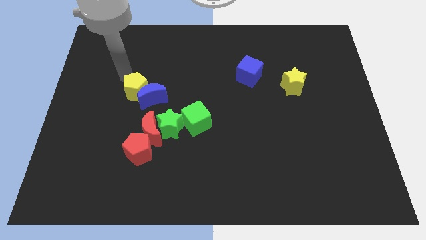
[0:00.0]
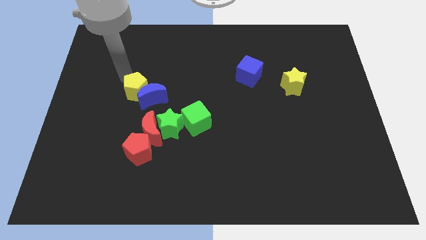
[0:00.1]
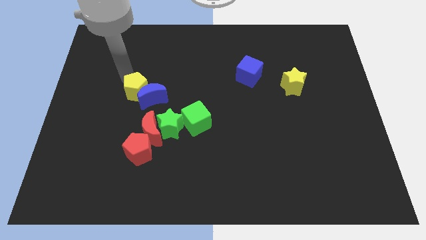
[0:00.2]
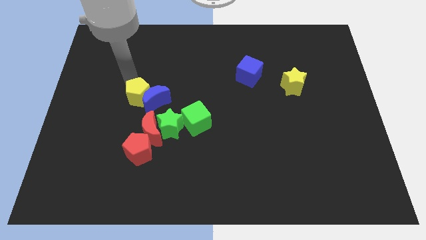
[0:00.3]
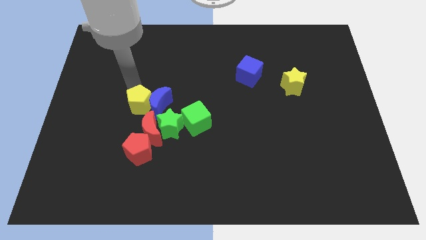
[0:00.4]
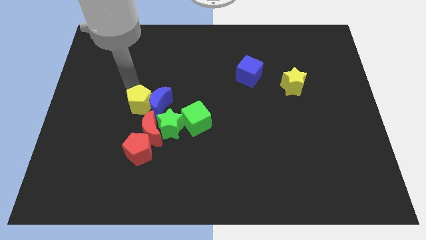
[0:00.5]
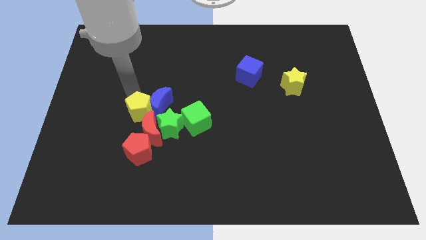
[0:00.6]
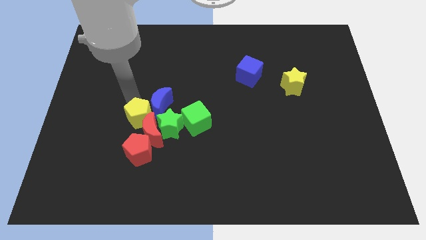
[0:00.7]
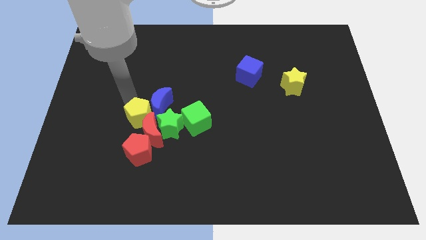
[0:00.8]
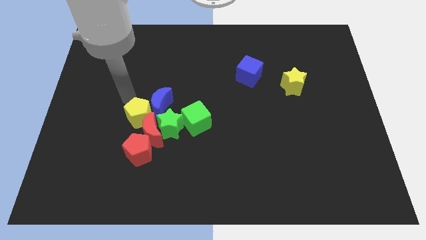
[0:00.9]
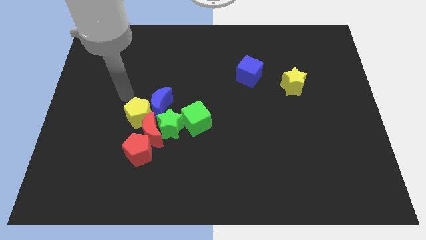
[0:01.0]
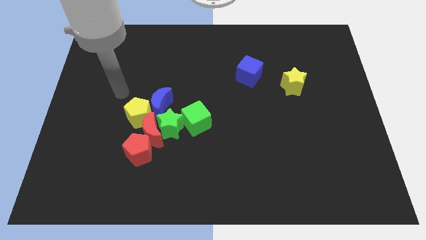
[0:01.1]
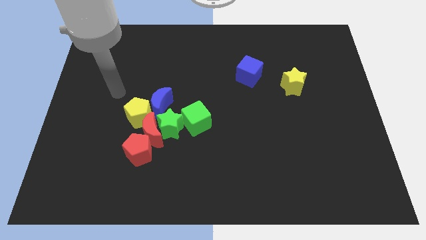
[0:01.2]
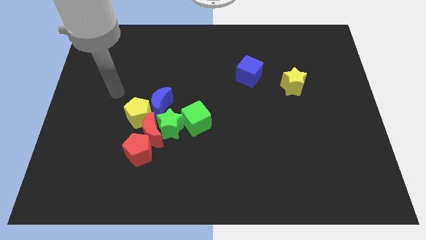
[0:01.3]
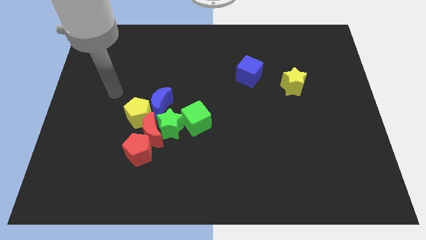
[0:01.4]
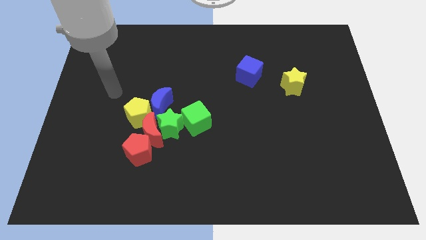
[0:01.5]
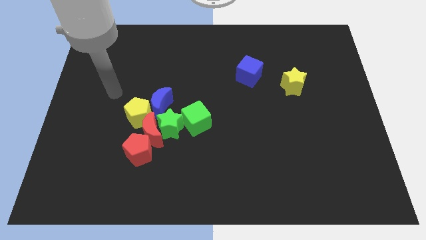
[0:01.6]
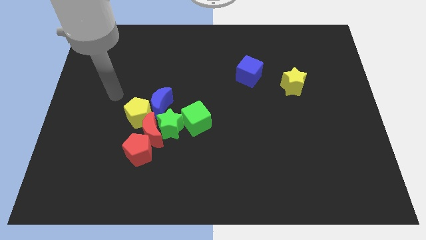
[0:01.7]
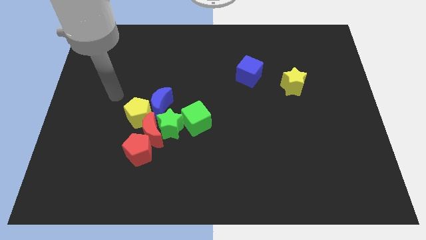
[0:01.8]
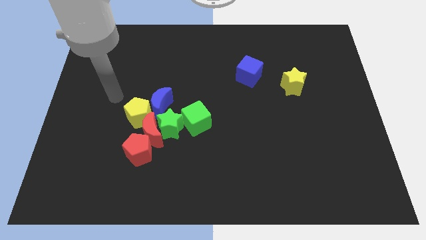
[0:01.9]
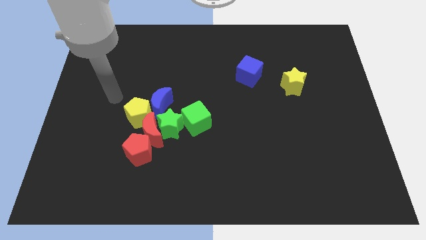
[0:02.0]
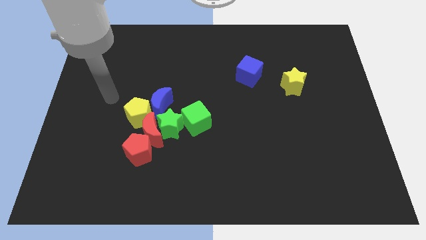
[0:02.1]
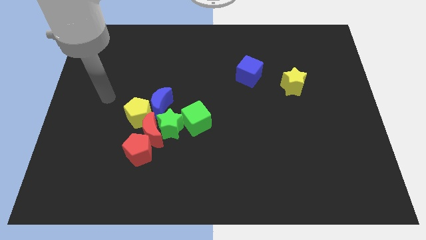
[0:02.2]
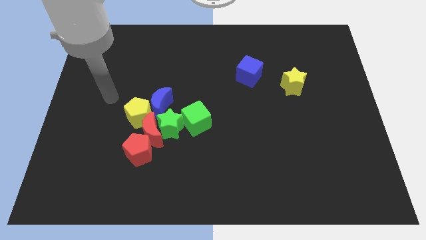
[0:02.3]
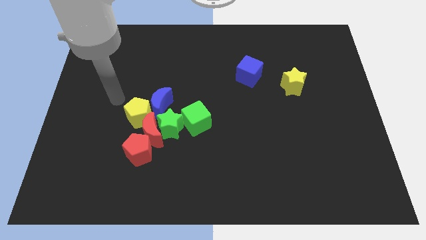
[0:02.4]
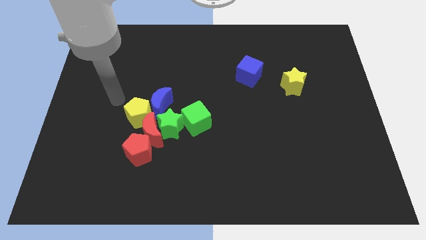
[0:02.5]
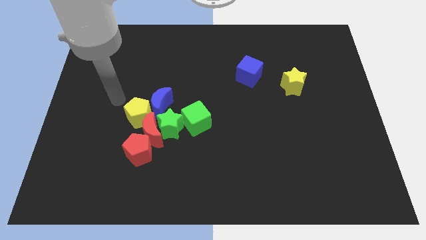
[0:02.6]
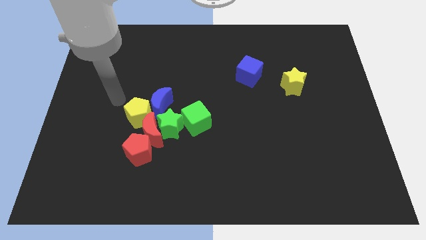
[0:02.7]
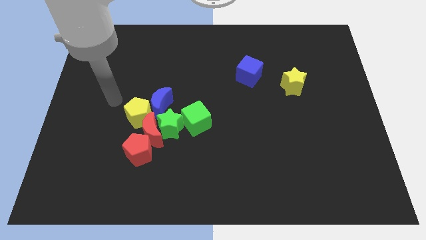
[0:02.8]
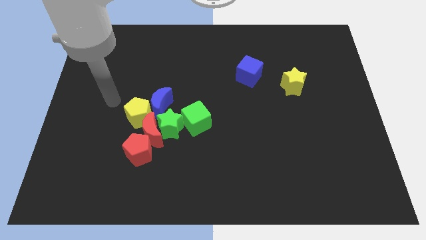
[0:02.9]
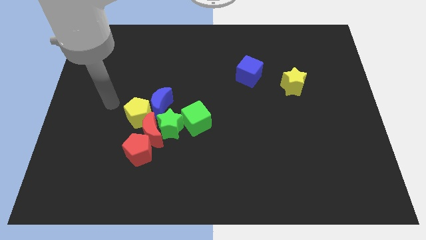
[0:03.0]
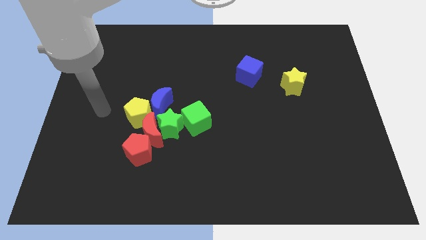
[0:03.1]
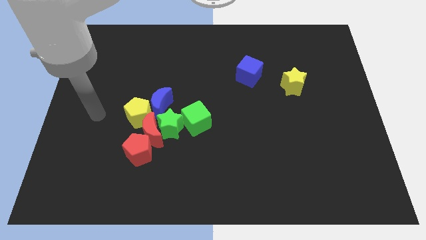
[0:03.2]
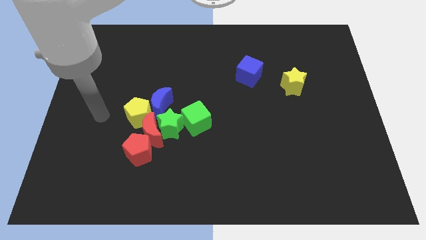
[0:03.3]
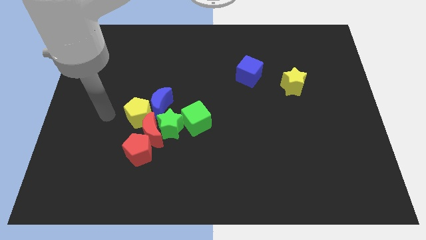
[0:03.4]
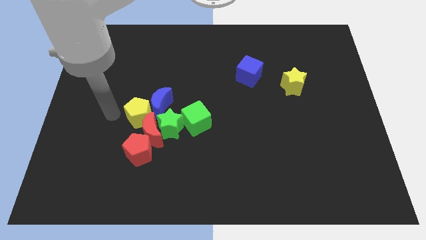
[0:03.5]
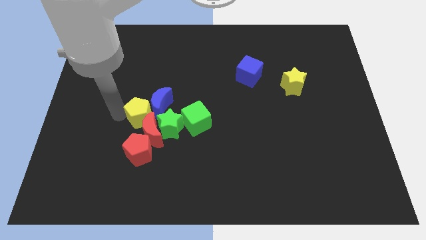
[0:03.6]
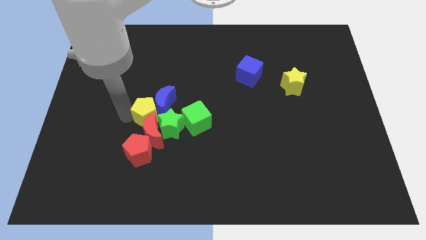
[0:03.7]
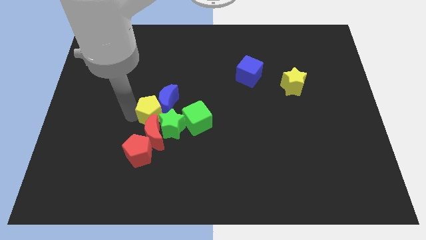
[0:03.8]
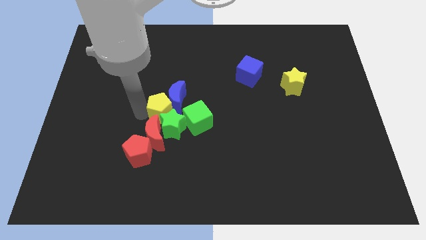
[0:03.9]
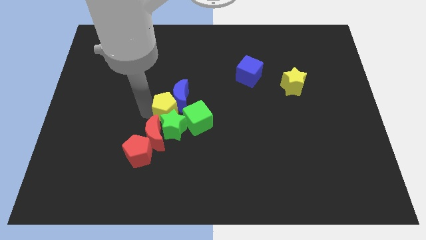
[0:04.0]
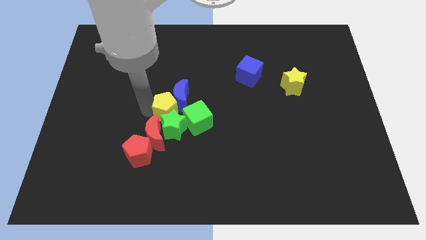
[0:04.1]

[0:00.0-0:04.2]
push the yellow pentagon close to the group of blocks

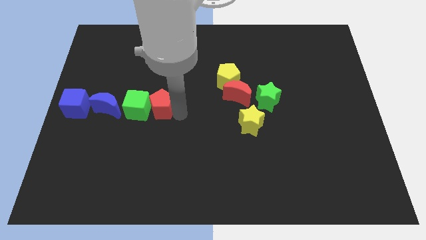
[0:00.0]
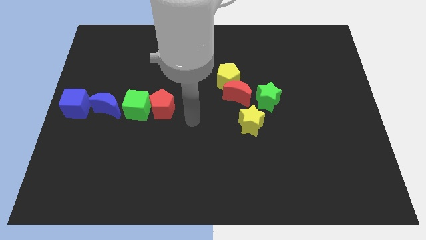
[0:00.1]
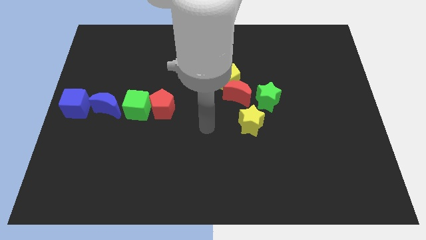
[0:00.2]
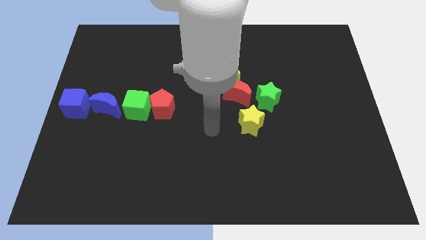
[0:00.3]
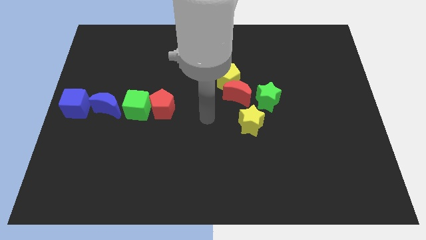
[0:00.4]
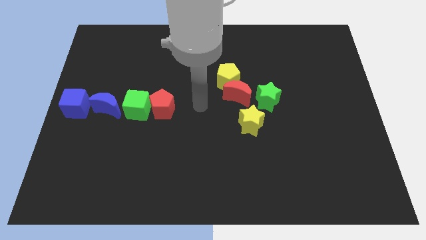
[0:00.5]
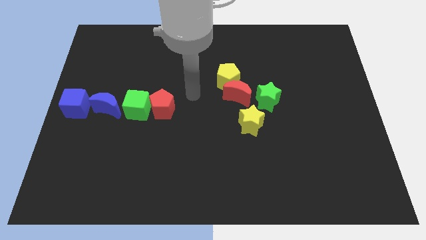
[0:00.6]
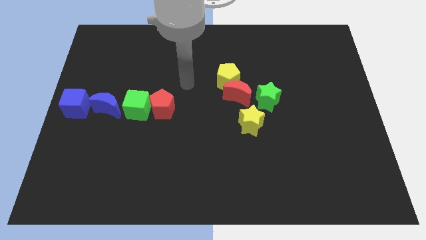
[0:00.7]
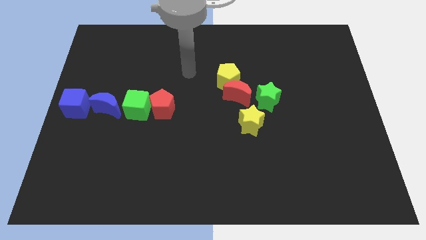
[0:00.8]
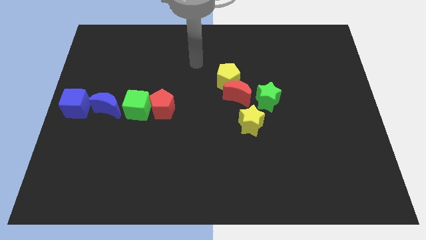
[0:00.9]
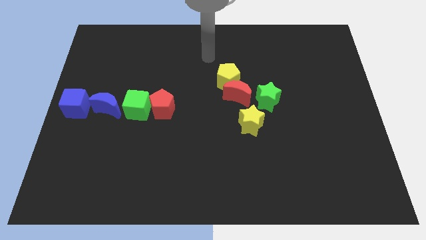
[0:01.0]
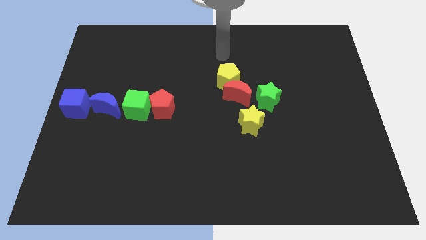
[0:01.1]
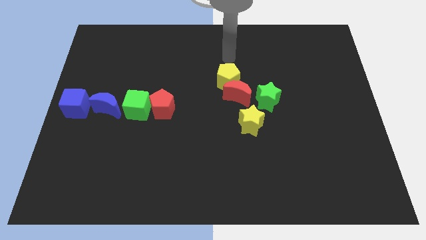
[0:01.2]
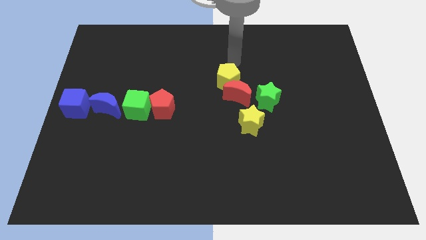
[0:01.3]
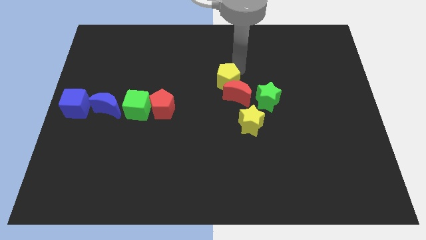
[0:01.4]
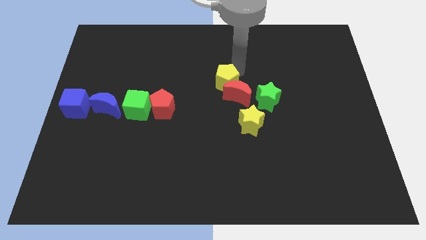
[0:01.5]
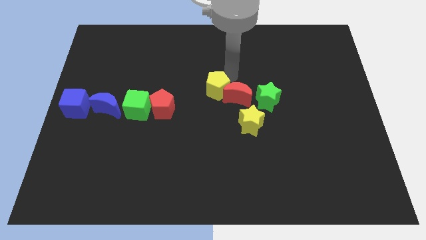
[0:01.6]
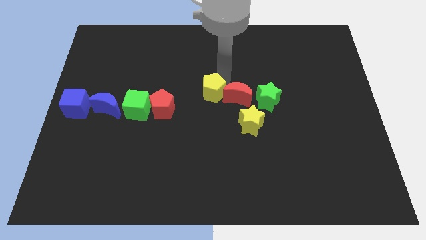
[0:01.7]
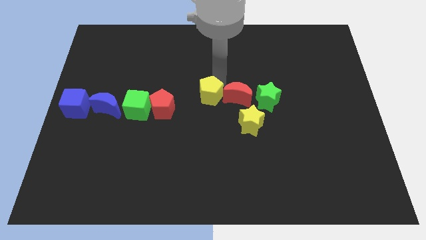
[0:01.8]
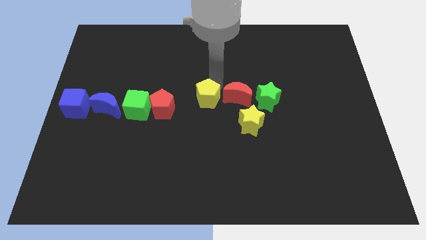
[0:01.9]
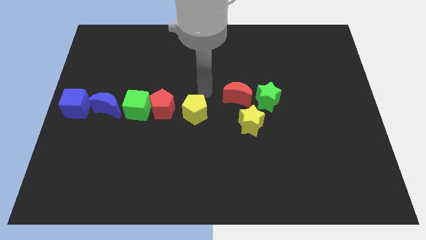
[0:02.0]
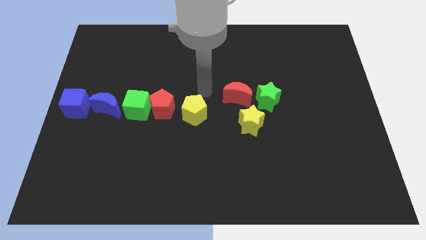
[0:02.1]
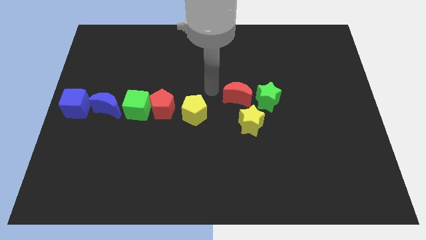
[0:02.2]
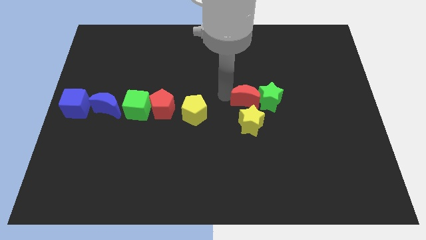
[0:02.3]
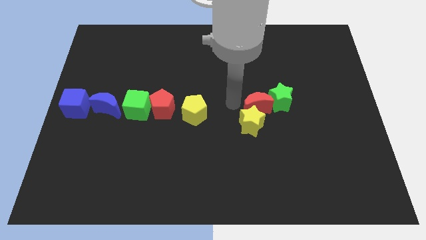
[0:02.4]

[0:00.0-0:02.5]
place the yellow pentagon to the right of the red pentagon

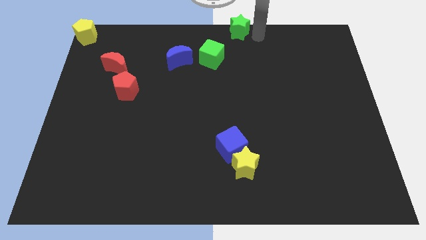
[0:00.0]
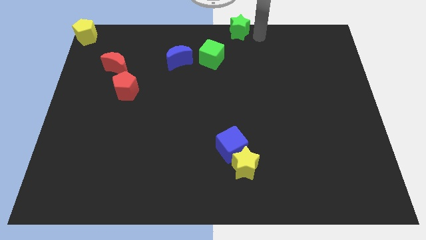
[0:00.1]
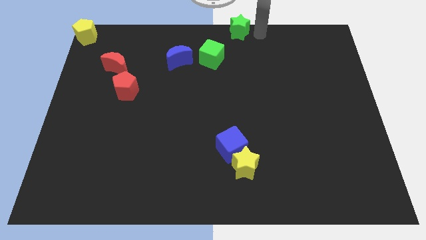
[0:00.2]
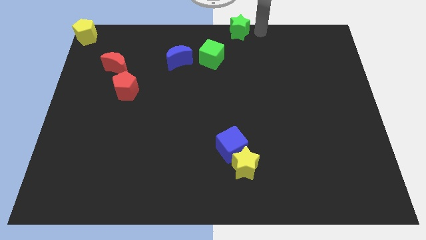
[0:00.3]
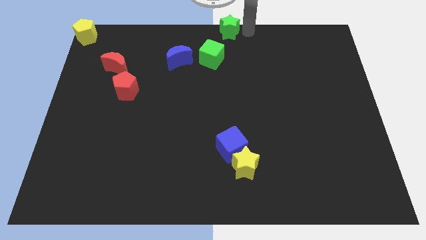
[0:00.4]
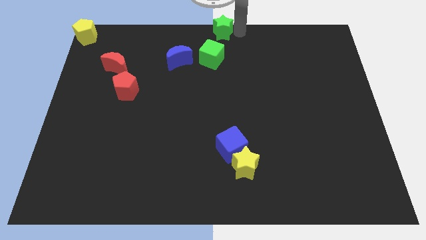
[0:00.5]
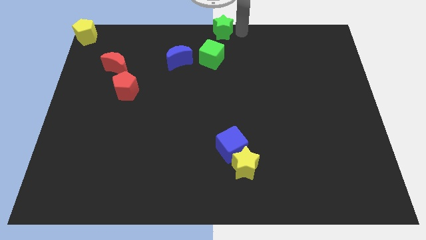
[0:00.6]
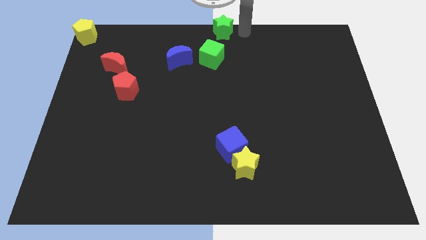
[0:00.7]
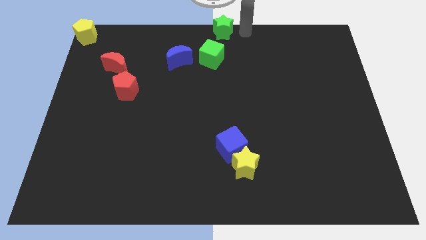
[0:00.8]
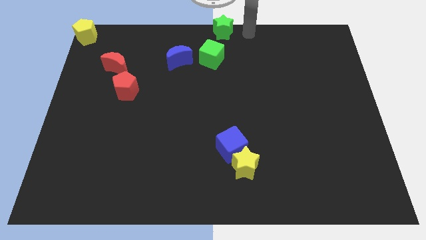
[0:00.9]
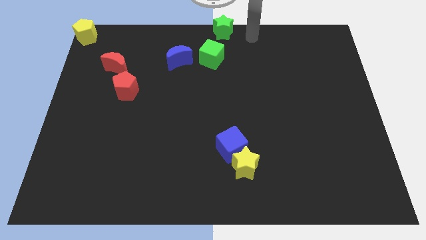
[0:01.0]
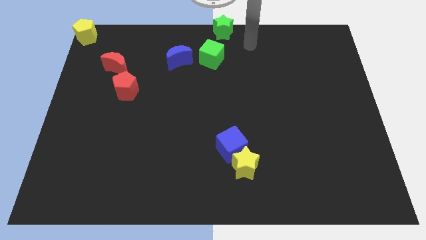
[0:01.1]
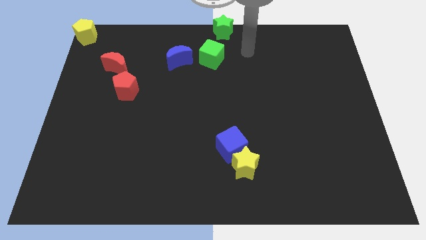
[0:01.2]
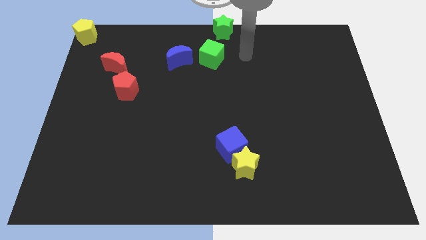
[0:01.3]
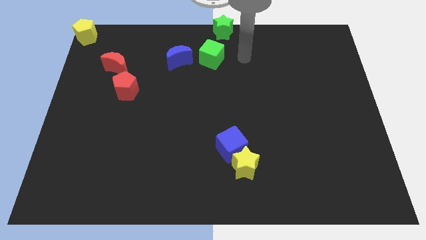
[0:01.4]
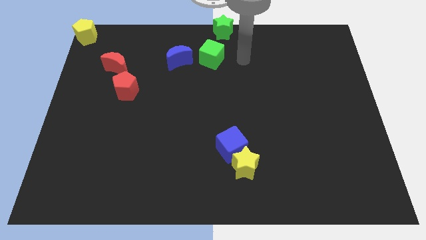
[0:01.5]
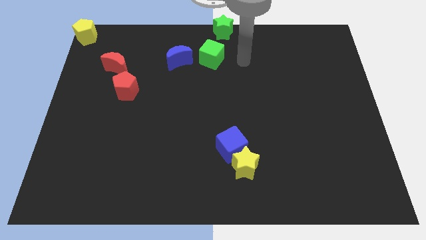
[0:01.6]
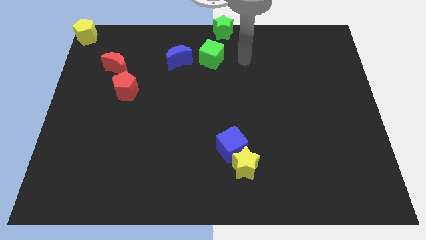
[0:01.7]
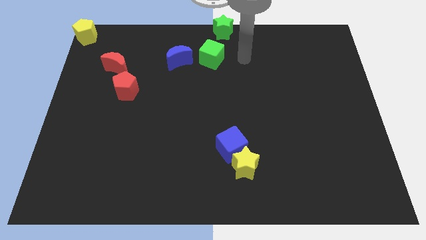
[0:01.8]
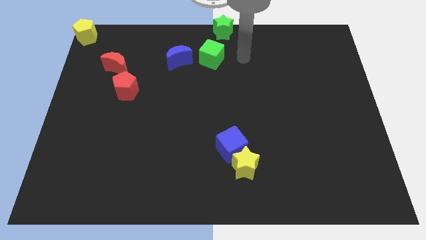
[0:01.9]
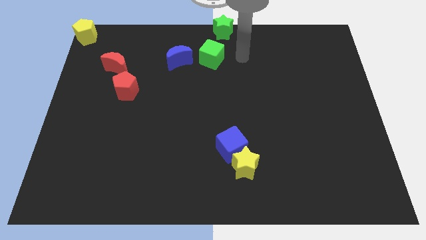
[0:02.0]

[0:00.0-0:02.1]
drag green star towards left side a bit
